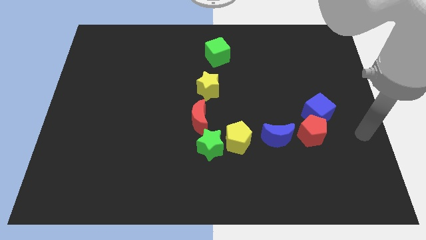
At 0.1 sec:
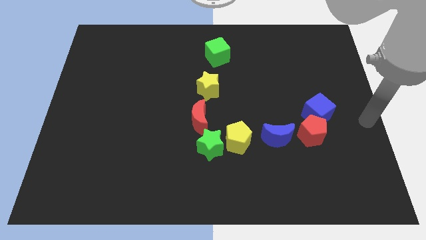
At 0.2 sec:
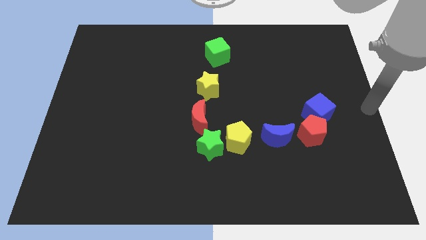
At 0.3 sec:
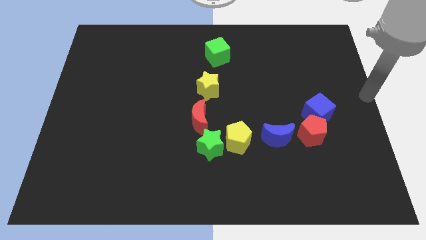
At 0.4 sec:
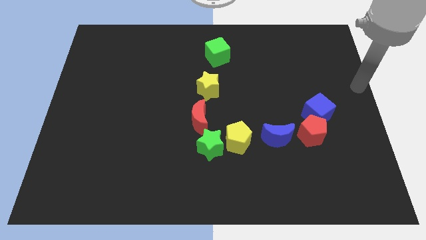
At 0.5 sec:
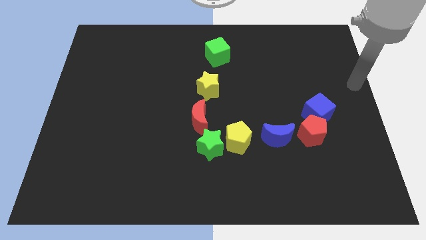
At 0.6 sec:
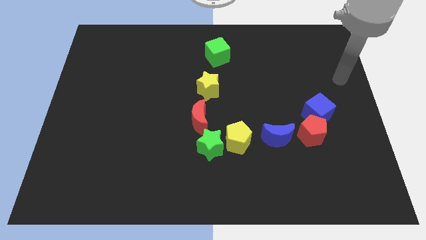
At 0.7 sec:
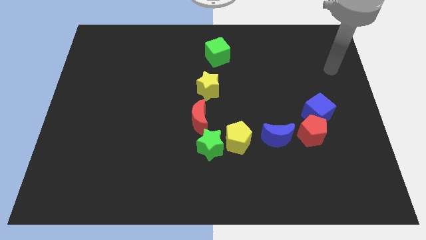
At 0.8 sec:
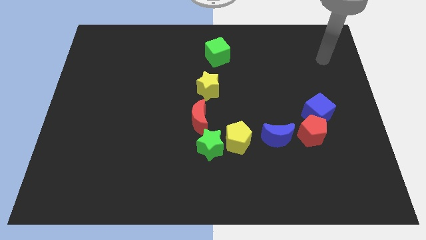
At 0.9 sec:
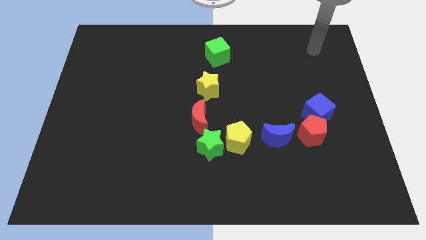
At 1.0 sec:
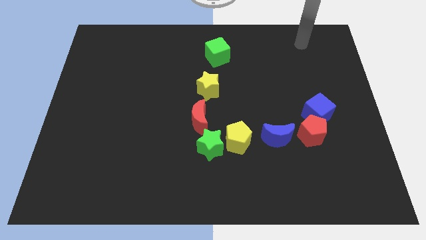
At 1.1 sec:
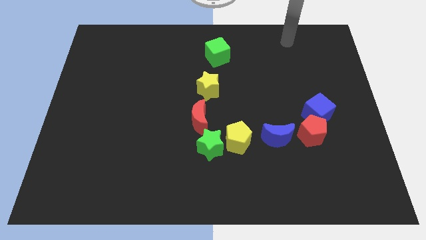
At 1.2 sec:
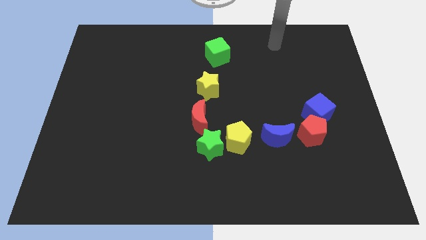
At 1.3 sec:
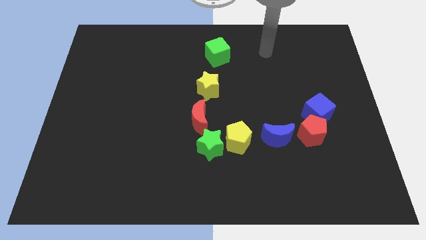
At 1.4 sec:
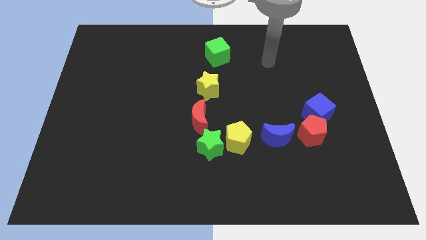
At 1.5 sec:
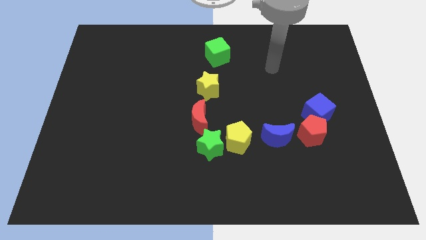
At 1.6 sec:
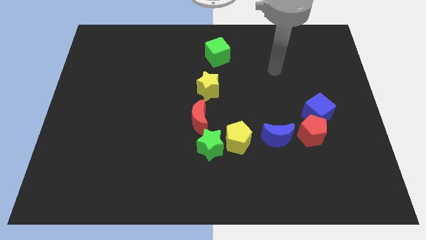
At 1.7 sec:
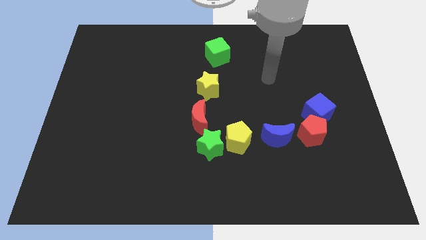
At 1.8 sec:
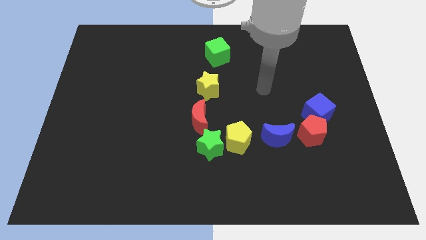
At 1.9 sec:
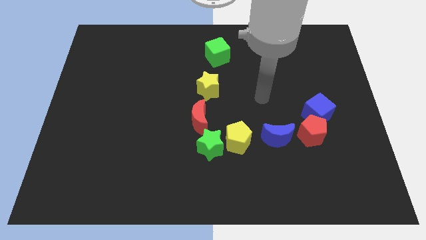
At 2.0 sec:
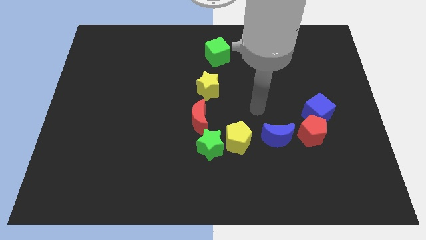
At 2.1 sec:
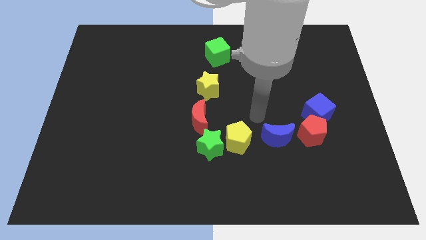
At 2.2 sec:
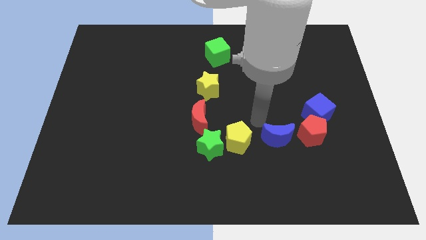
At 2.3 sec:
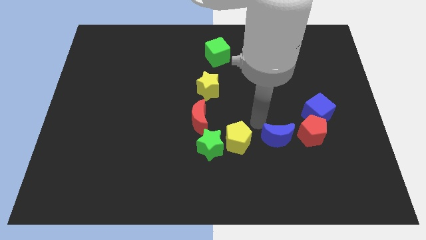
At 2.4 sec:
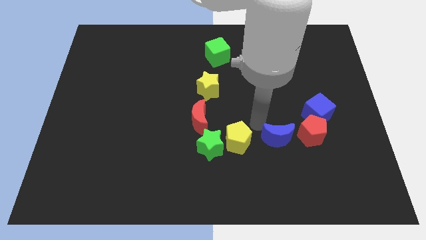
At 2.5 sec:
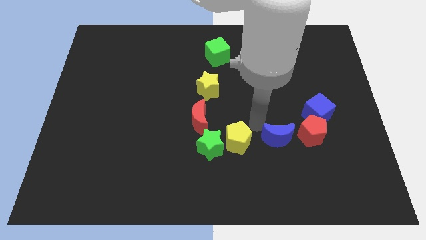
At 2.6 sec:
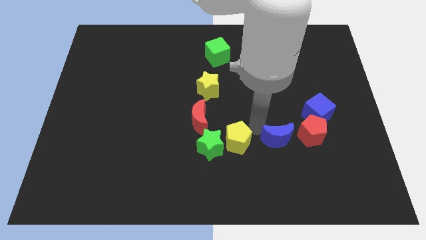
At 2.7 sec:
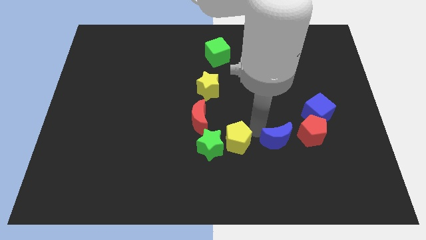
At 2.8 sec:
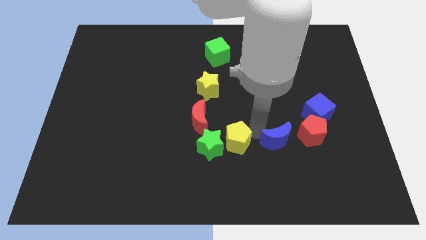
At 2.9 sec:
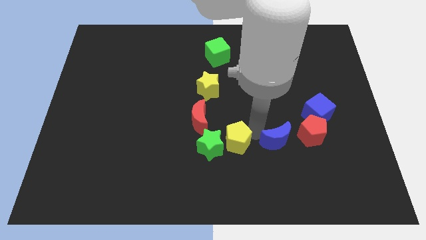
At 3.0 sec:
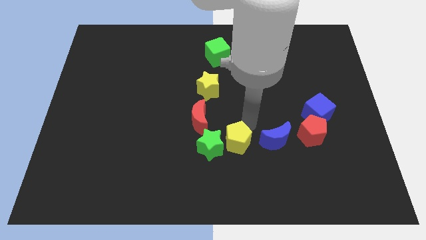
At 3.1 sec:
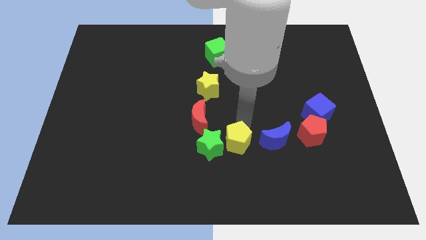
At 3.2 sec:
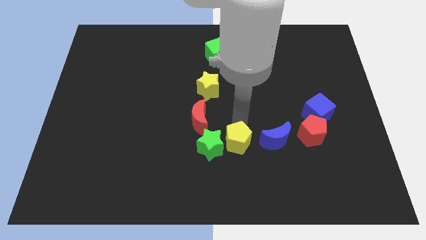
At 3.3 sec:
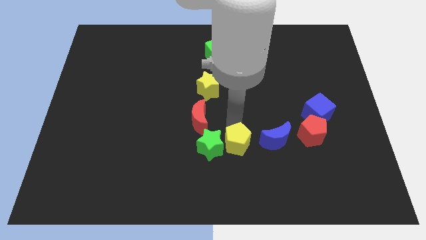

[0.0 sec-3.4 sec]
touch the top side of the yellow pentagon

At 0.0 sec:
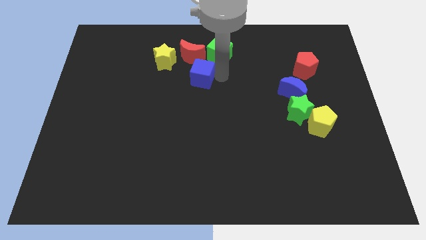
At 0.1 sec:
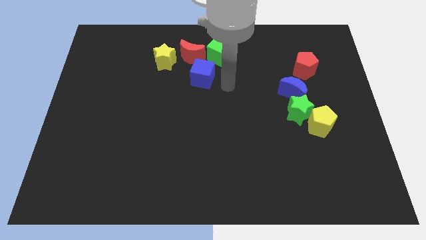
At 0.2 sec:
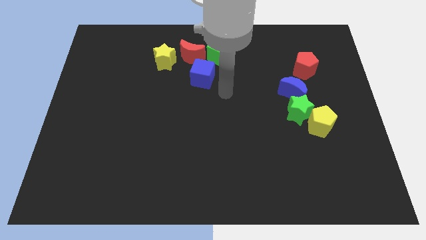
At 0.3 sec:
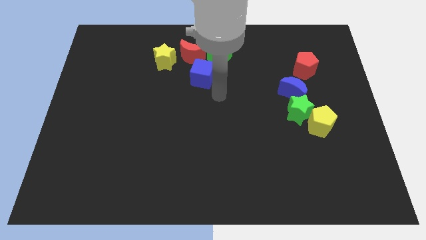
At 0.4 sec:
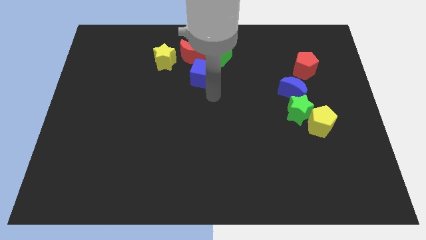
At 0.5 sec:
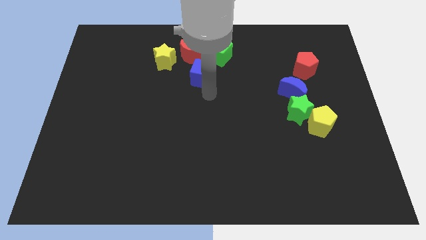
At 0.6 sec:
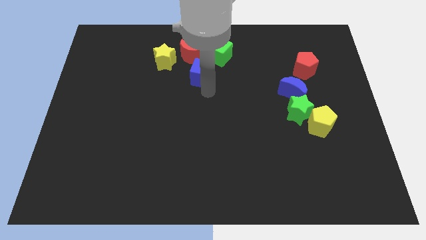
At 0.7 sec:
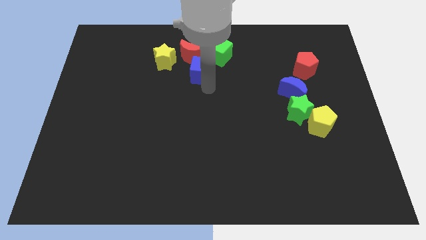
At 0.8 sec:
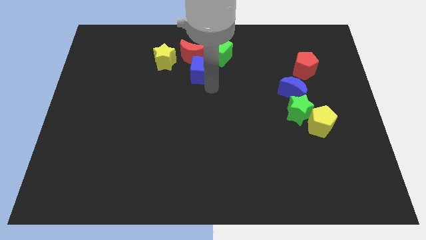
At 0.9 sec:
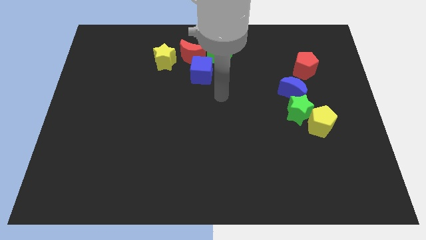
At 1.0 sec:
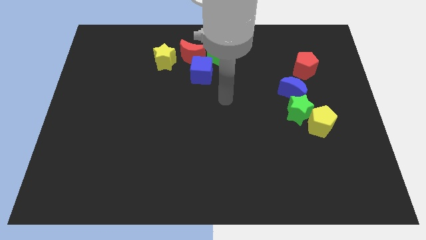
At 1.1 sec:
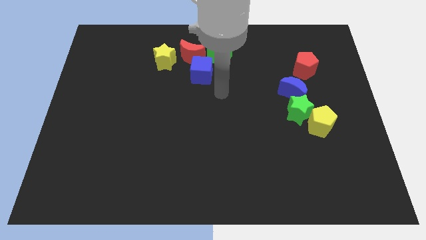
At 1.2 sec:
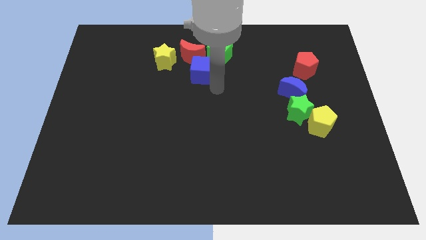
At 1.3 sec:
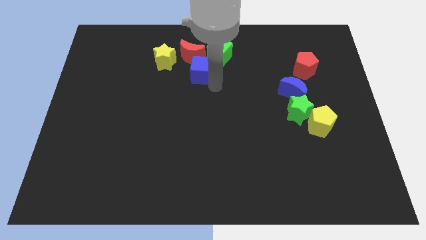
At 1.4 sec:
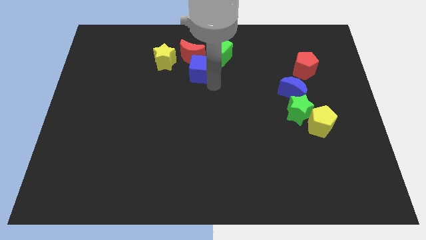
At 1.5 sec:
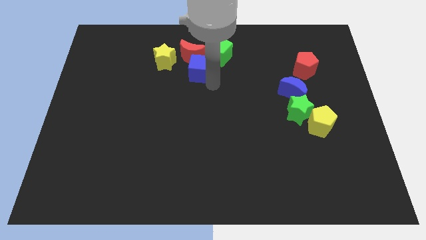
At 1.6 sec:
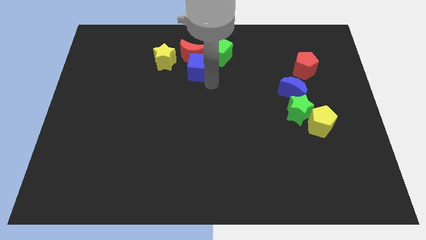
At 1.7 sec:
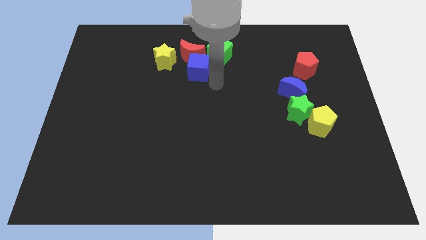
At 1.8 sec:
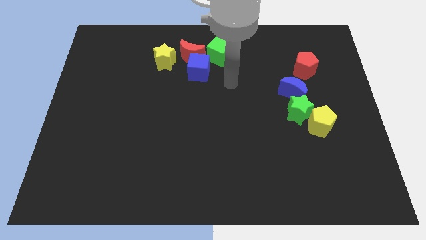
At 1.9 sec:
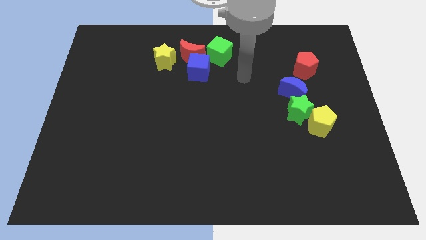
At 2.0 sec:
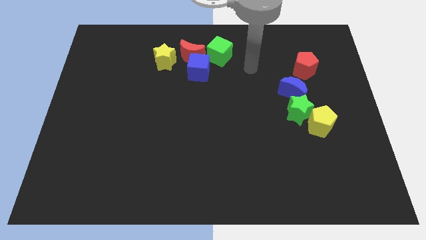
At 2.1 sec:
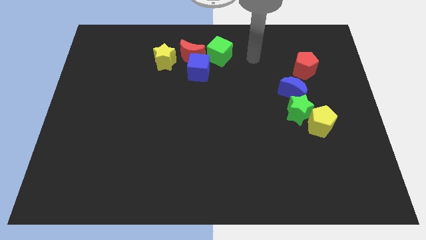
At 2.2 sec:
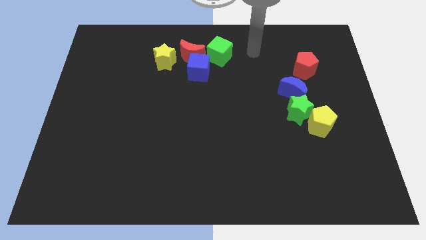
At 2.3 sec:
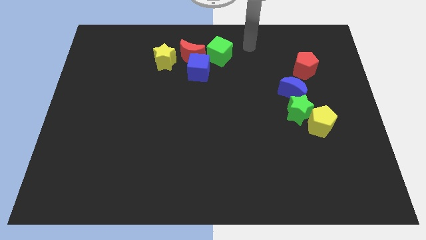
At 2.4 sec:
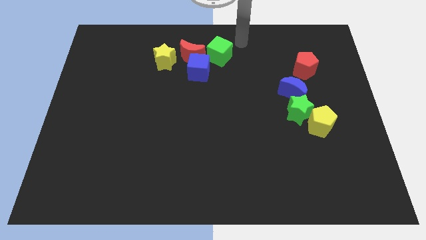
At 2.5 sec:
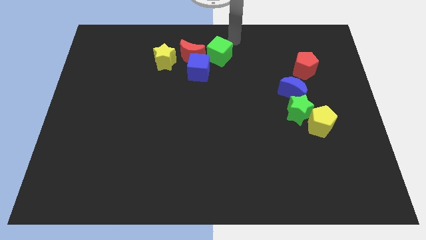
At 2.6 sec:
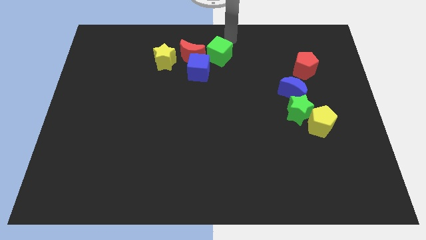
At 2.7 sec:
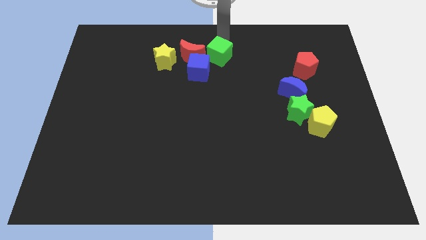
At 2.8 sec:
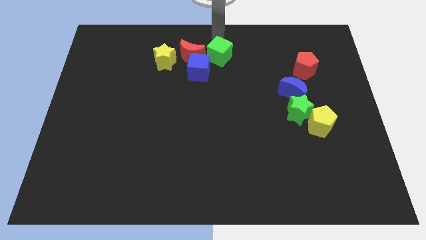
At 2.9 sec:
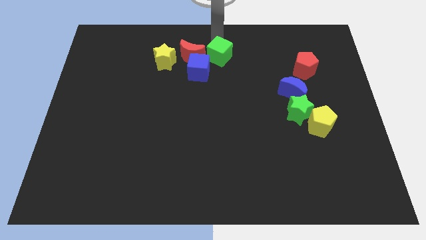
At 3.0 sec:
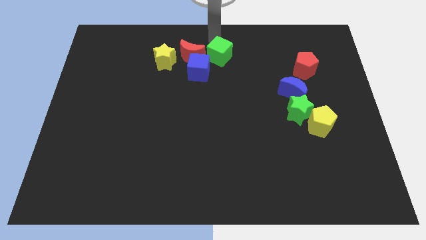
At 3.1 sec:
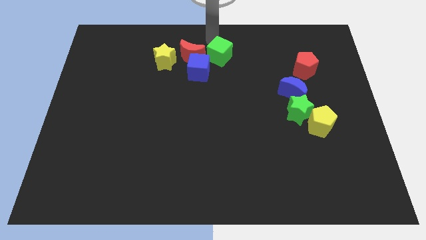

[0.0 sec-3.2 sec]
push the blue cube into the red moon

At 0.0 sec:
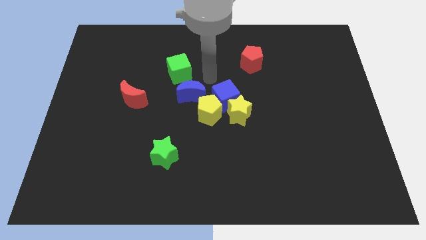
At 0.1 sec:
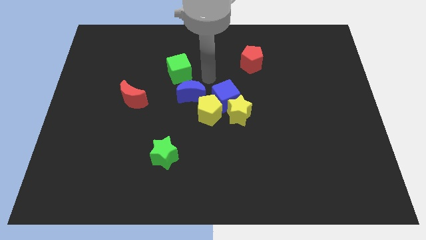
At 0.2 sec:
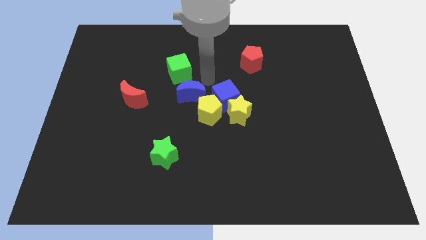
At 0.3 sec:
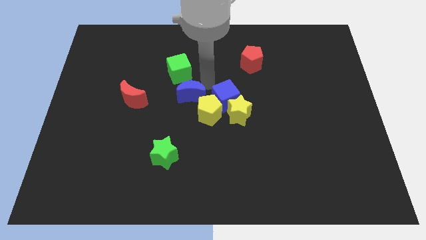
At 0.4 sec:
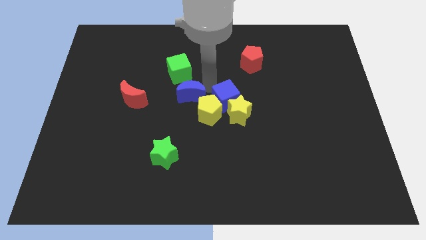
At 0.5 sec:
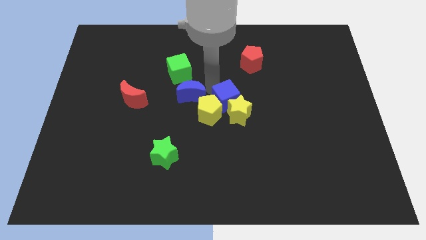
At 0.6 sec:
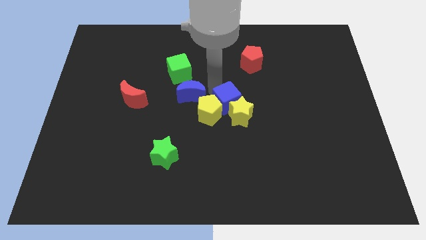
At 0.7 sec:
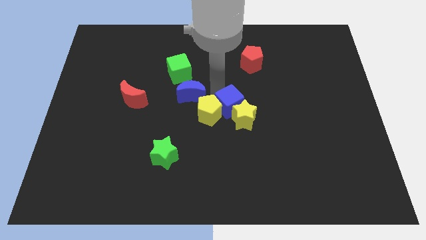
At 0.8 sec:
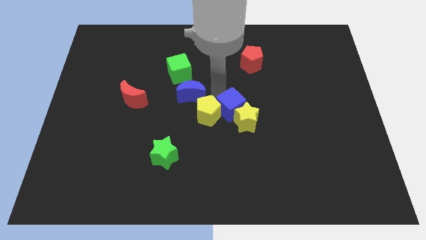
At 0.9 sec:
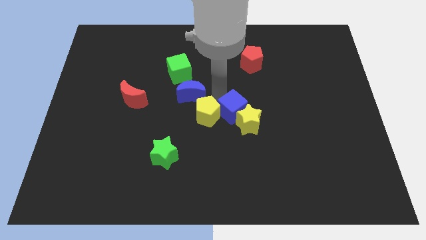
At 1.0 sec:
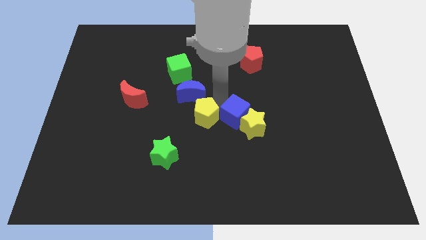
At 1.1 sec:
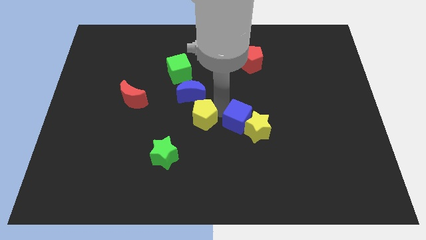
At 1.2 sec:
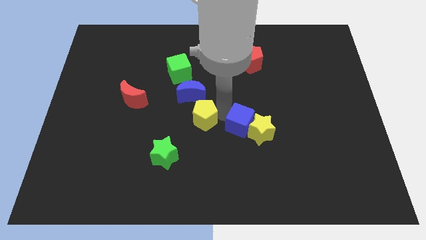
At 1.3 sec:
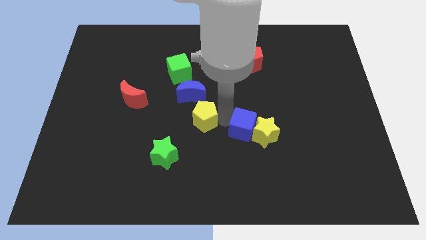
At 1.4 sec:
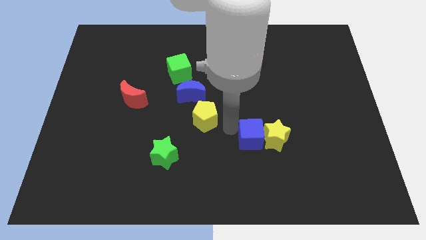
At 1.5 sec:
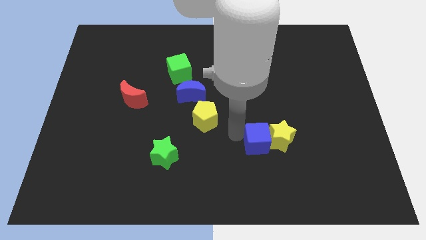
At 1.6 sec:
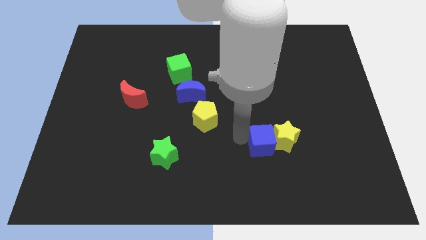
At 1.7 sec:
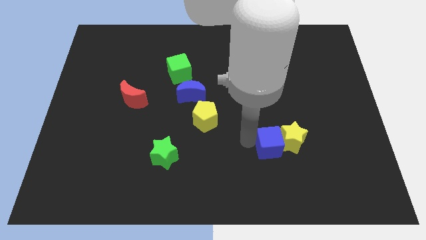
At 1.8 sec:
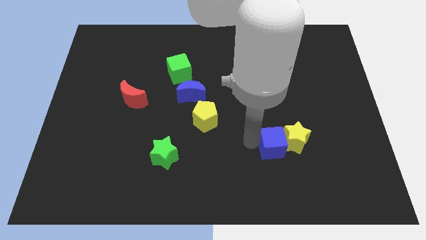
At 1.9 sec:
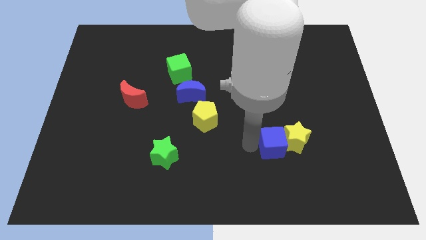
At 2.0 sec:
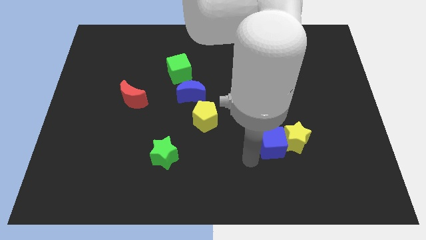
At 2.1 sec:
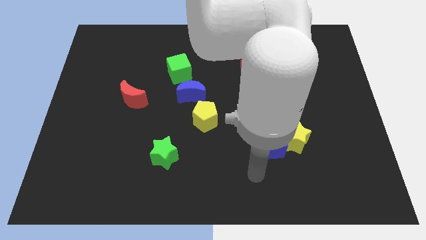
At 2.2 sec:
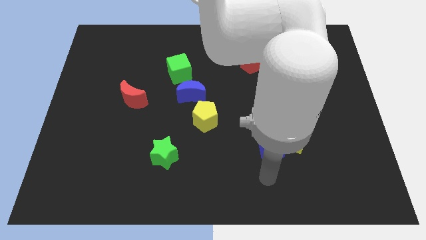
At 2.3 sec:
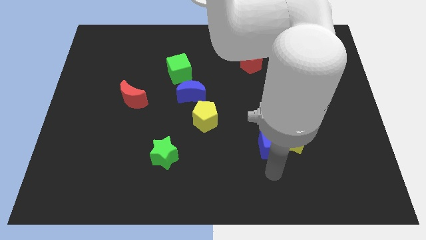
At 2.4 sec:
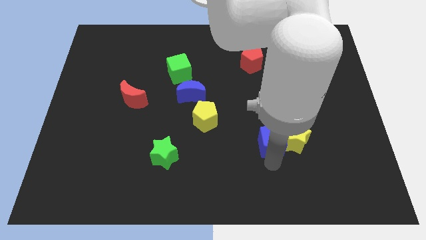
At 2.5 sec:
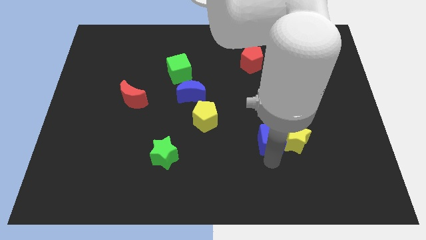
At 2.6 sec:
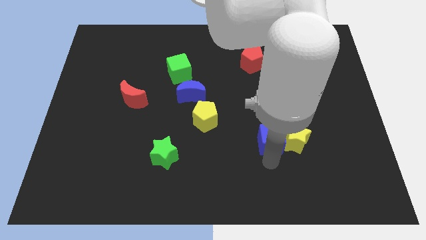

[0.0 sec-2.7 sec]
separate the blue cube and yellow pentagon
